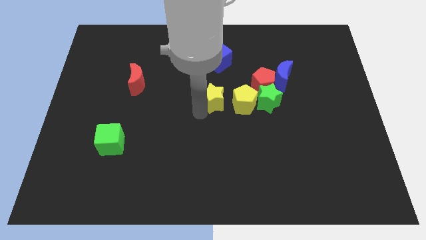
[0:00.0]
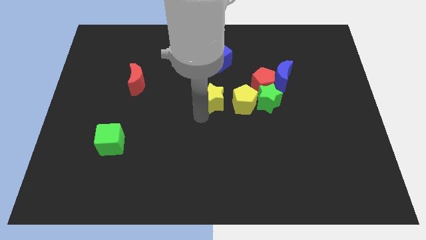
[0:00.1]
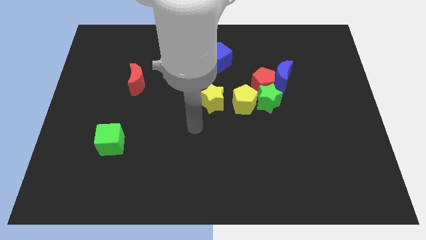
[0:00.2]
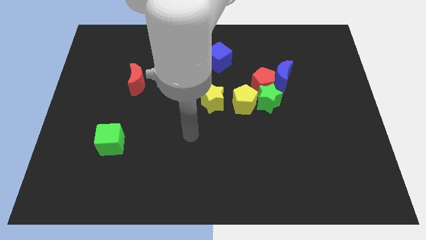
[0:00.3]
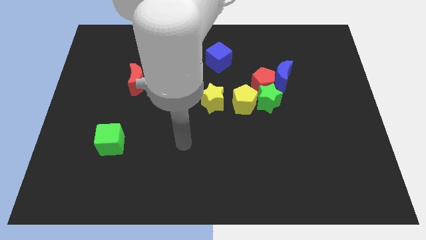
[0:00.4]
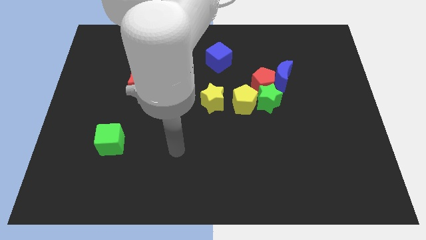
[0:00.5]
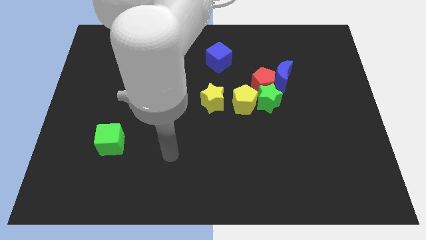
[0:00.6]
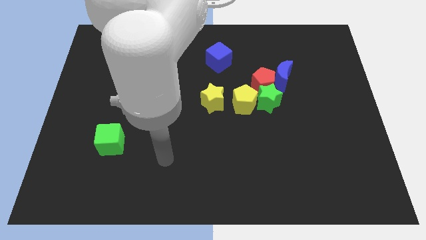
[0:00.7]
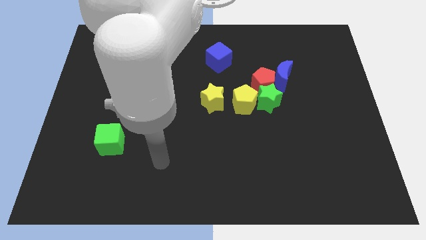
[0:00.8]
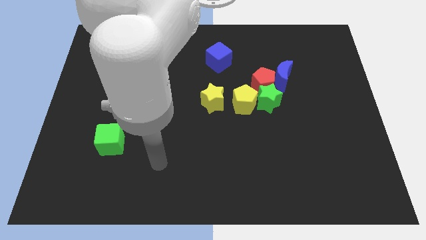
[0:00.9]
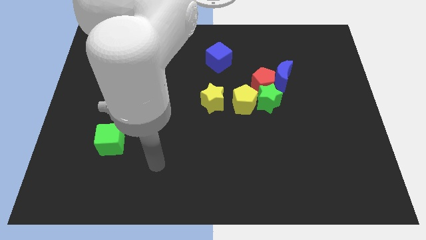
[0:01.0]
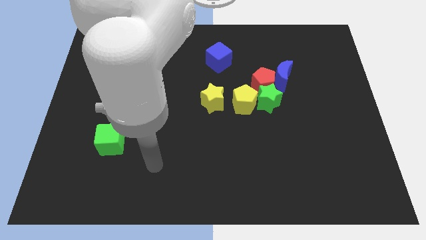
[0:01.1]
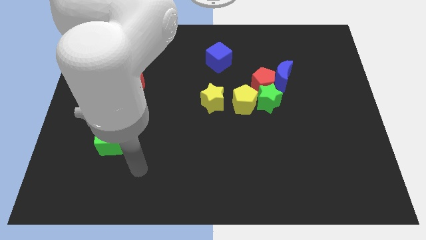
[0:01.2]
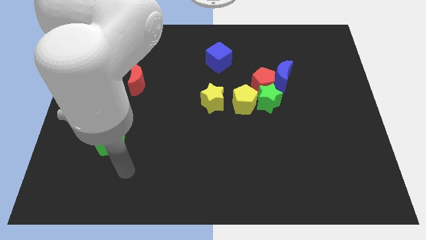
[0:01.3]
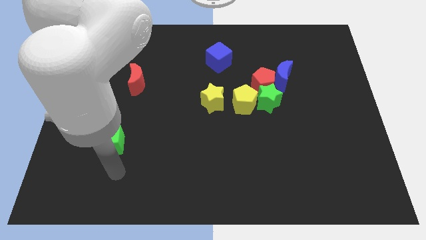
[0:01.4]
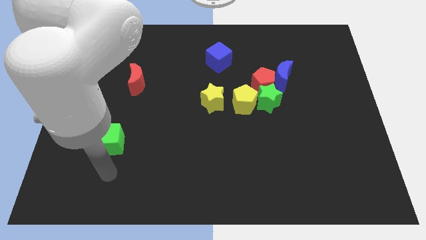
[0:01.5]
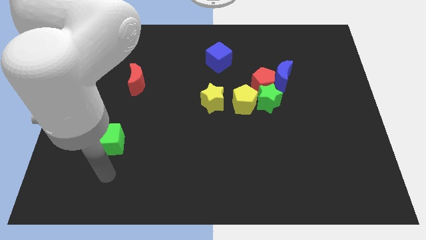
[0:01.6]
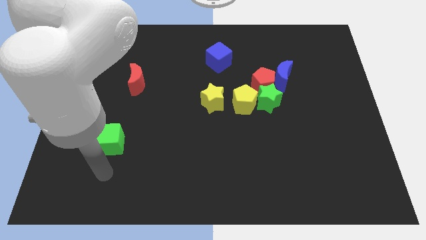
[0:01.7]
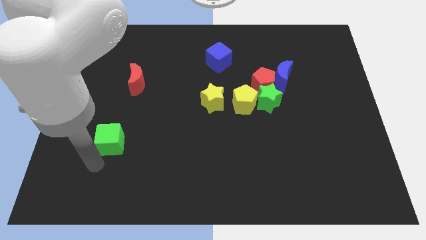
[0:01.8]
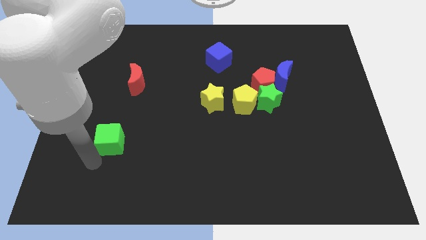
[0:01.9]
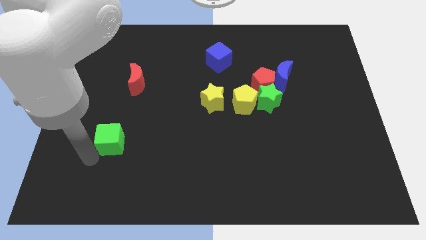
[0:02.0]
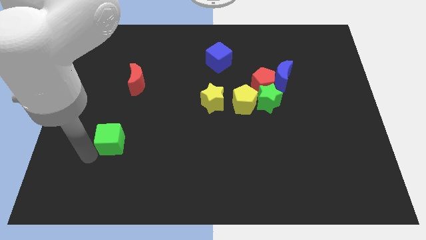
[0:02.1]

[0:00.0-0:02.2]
move the arm to the green cube

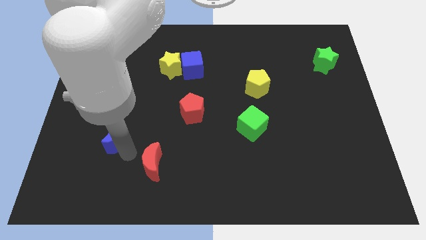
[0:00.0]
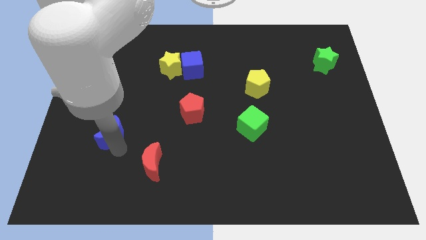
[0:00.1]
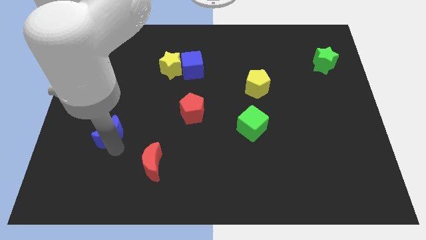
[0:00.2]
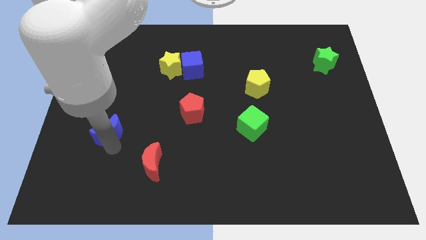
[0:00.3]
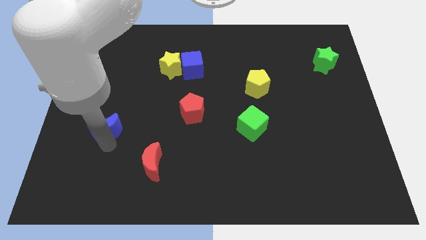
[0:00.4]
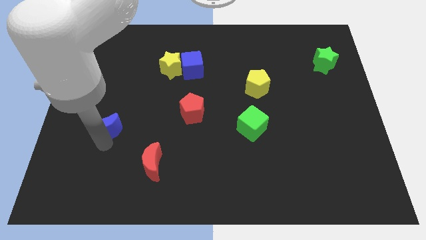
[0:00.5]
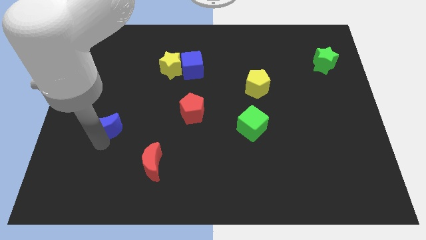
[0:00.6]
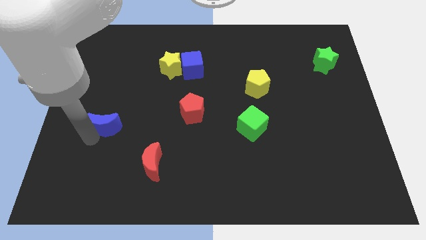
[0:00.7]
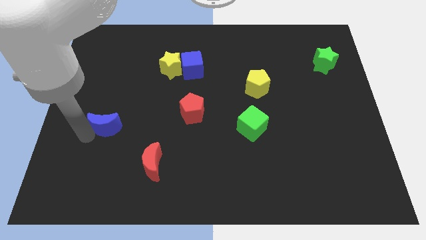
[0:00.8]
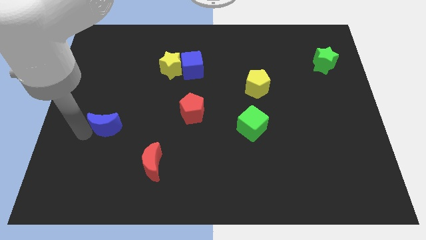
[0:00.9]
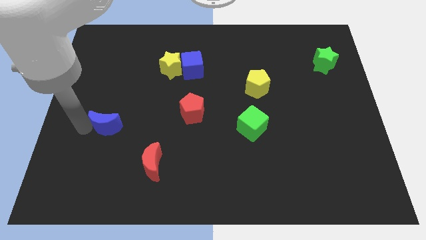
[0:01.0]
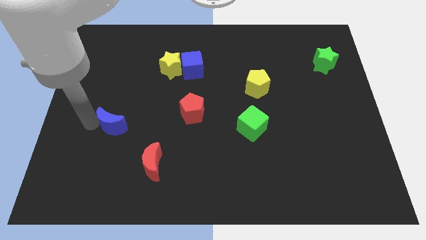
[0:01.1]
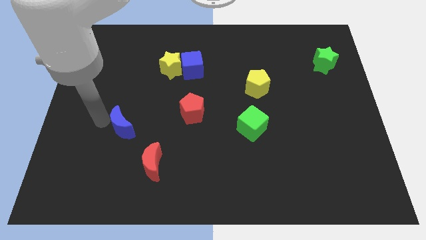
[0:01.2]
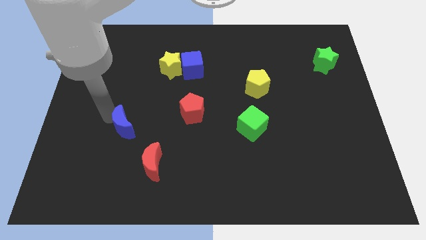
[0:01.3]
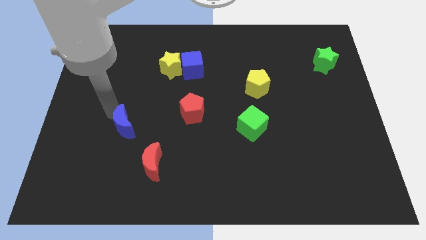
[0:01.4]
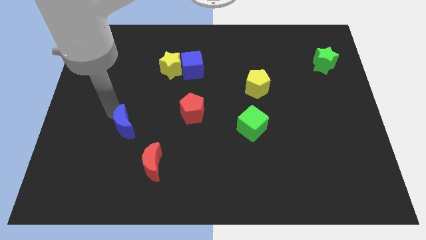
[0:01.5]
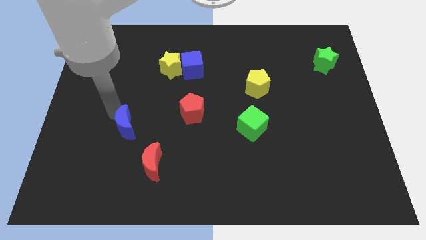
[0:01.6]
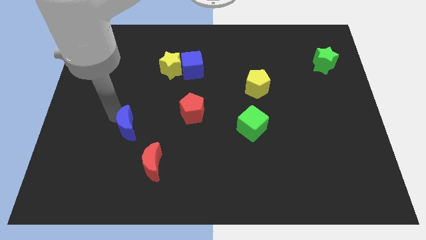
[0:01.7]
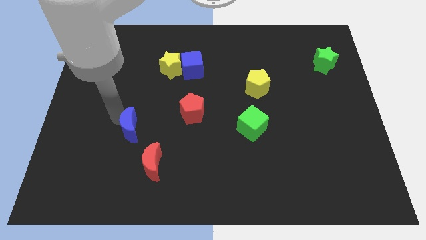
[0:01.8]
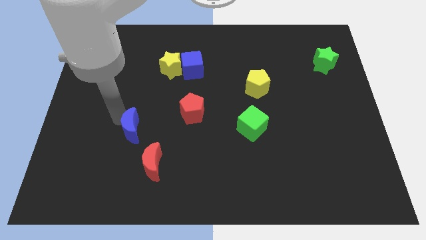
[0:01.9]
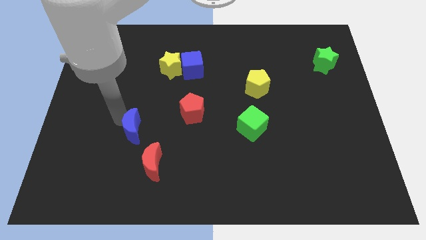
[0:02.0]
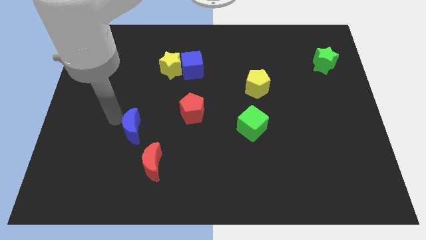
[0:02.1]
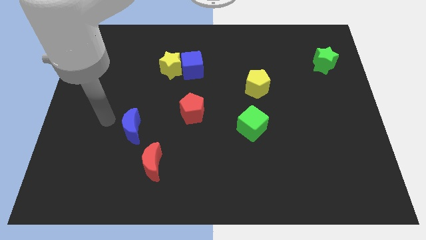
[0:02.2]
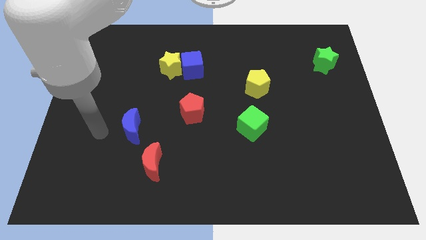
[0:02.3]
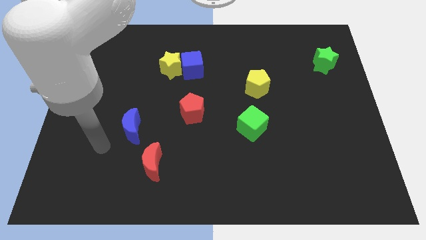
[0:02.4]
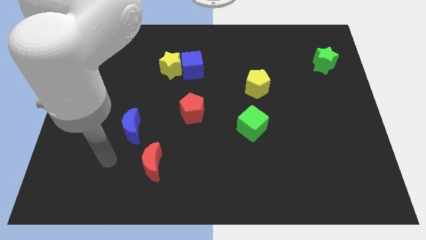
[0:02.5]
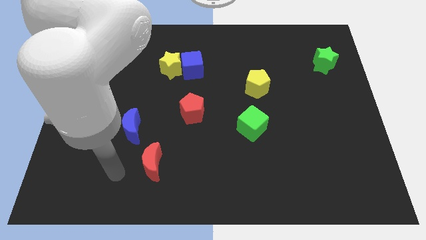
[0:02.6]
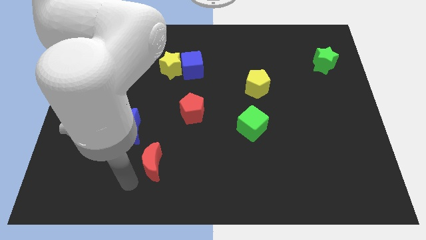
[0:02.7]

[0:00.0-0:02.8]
place the blue moon to the top left of the red crescent

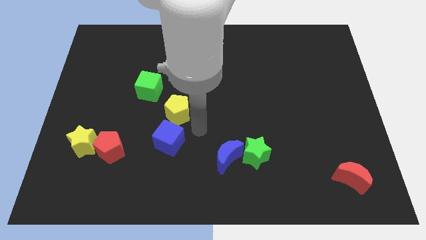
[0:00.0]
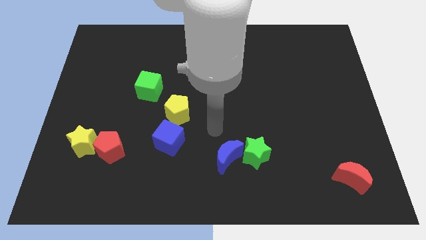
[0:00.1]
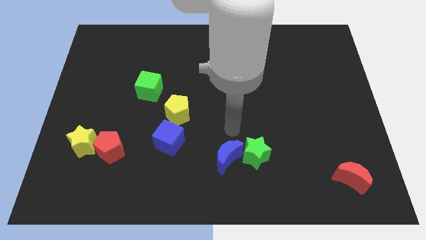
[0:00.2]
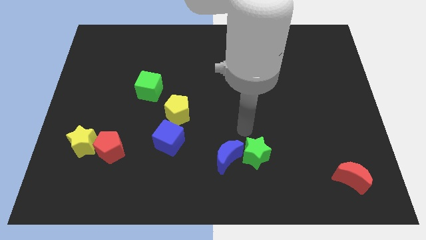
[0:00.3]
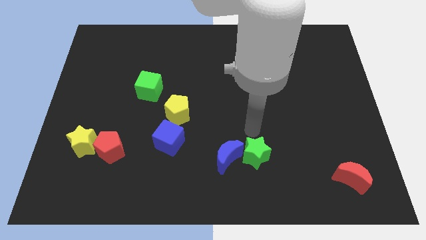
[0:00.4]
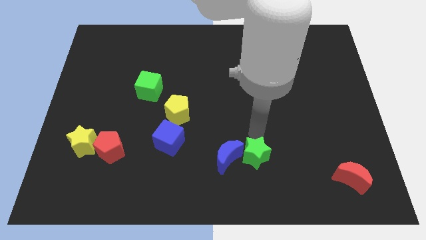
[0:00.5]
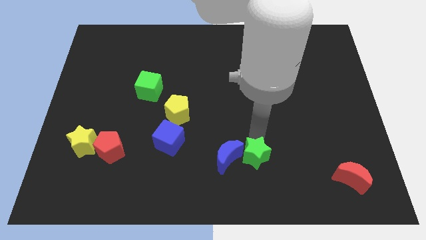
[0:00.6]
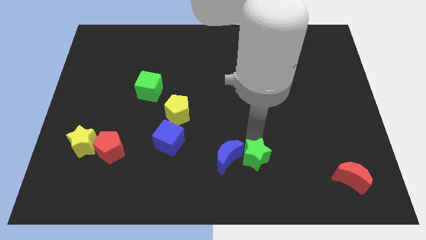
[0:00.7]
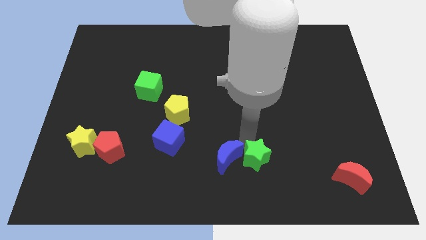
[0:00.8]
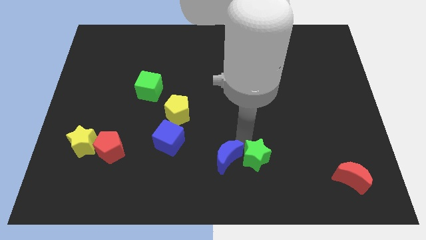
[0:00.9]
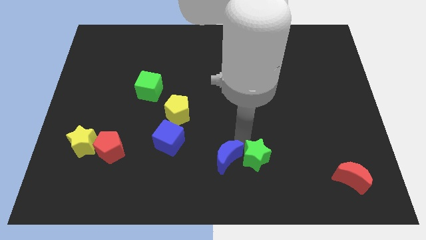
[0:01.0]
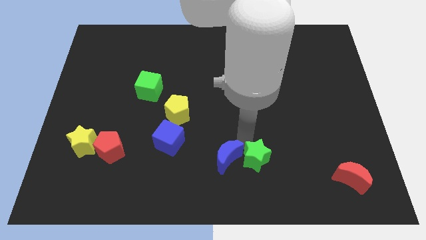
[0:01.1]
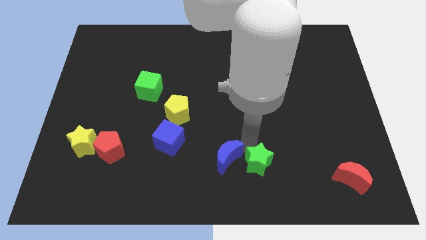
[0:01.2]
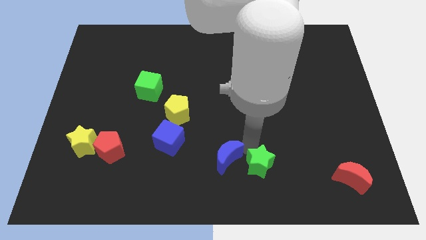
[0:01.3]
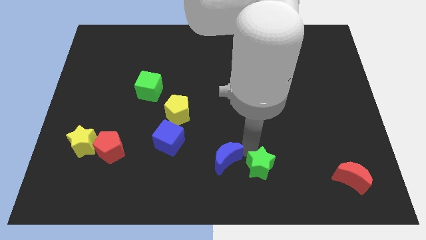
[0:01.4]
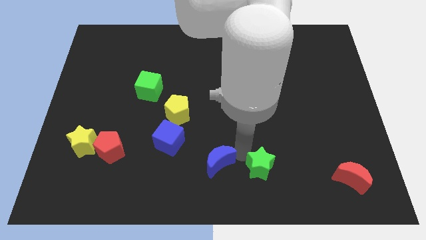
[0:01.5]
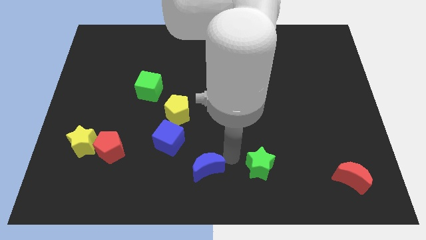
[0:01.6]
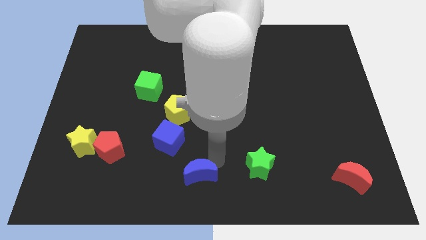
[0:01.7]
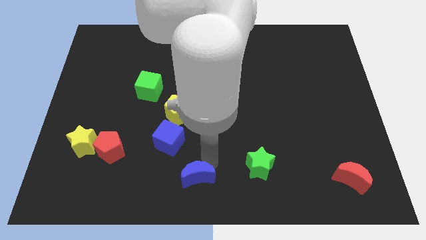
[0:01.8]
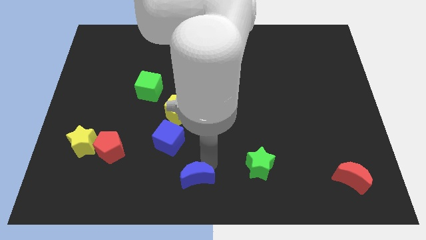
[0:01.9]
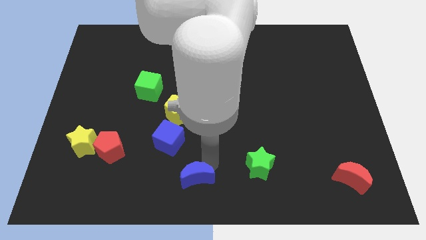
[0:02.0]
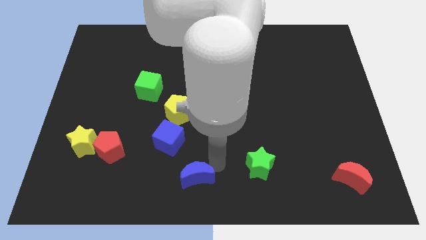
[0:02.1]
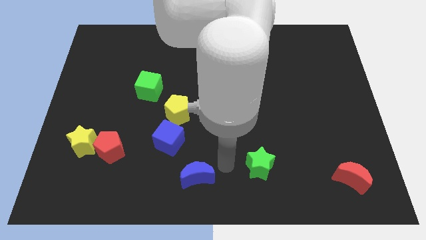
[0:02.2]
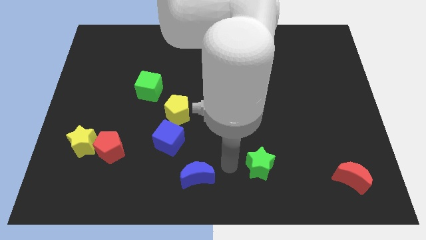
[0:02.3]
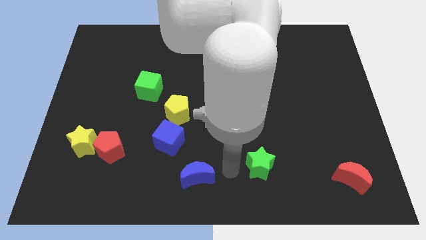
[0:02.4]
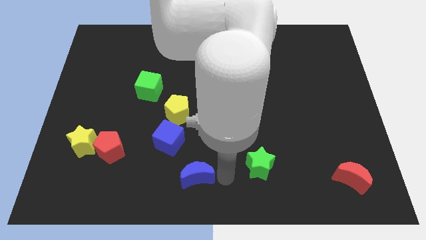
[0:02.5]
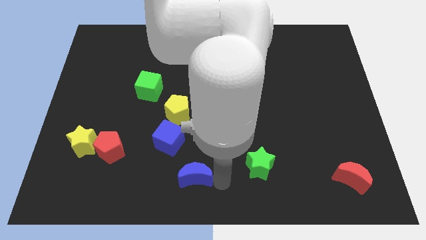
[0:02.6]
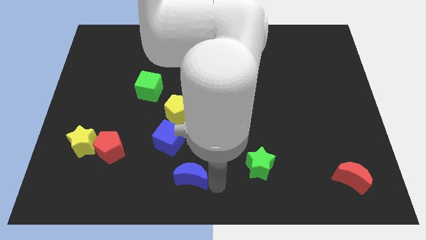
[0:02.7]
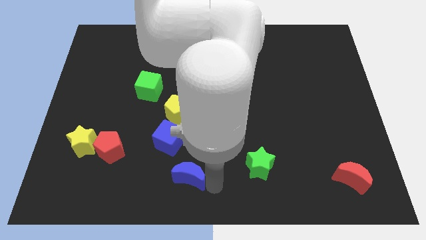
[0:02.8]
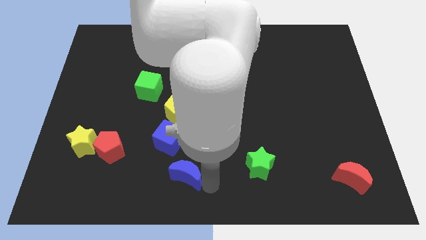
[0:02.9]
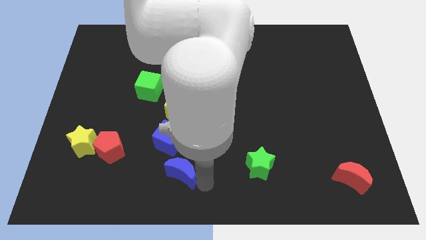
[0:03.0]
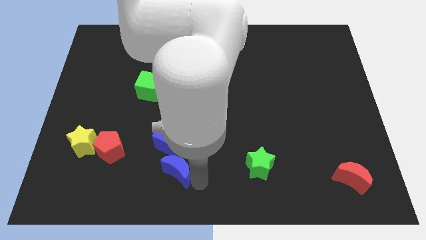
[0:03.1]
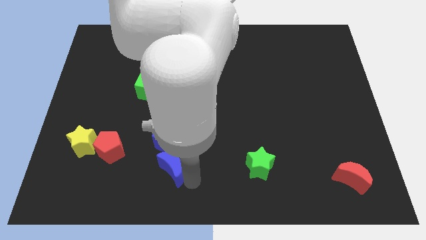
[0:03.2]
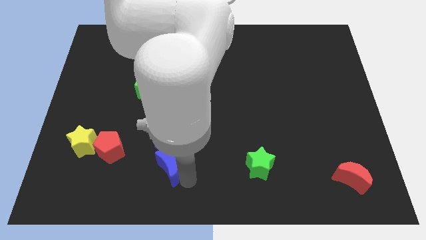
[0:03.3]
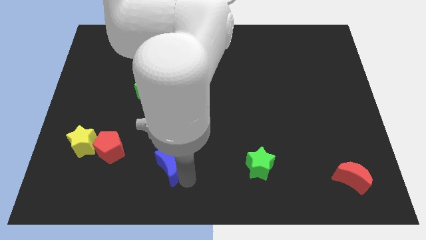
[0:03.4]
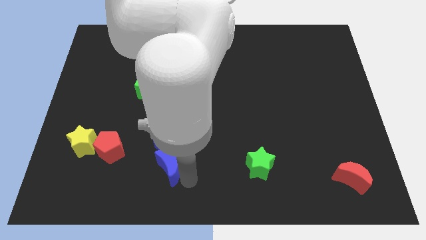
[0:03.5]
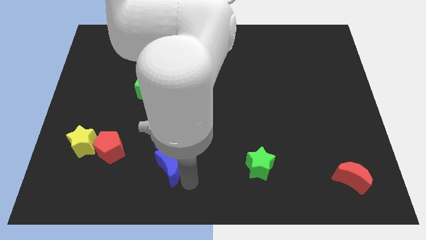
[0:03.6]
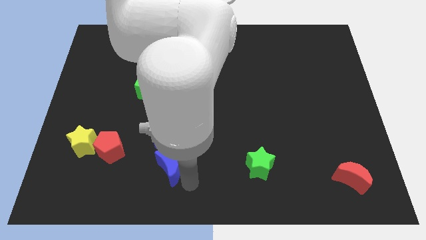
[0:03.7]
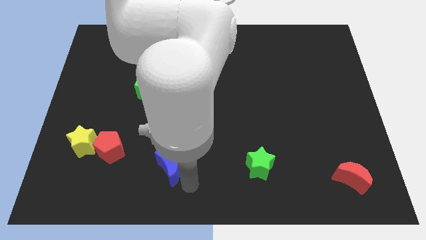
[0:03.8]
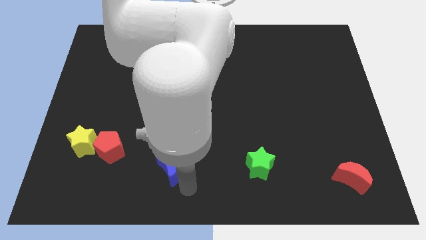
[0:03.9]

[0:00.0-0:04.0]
place the blue moon below the blue cube
